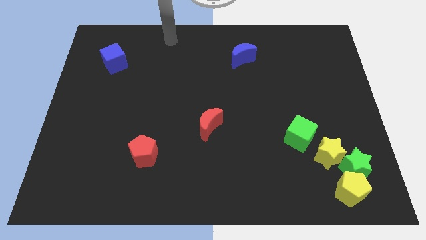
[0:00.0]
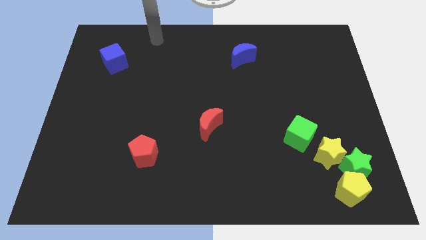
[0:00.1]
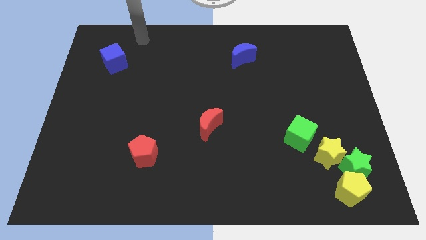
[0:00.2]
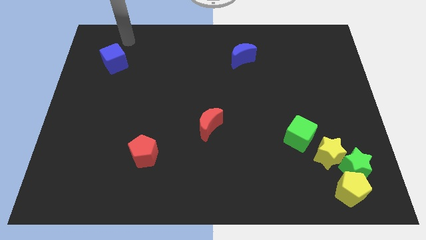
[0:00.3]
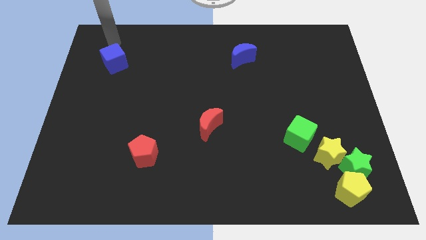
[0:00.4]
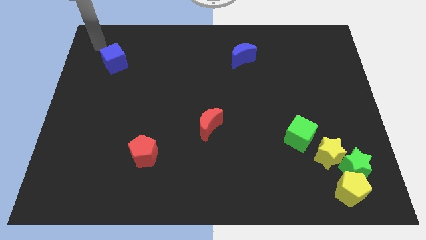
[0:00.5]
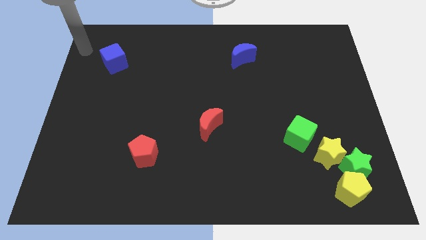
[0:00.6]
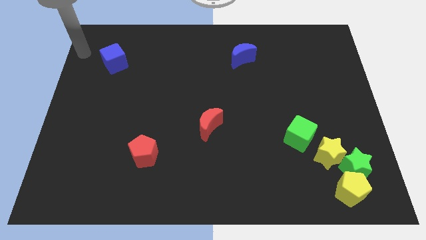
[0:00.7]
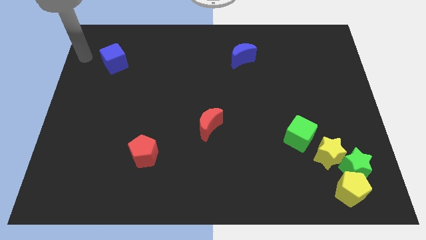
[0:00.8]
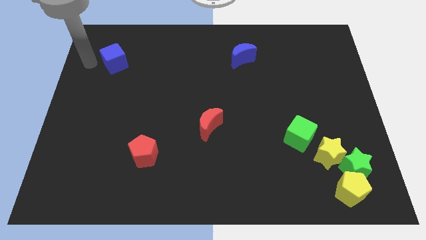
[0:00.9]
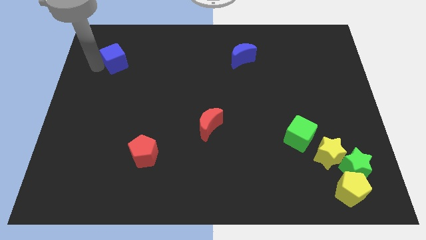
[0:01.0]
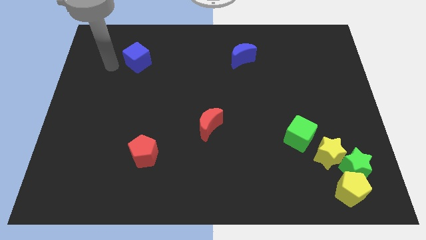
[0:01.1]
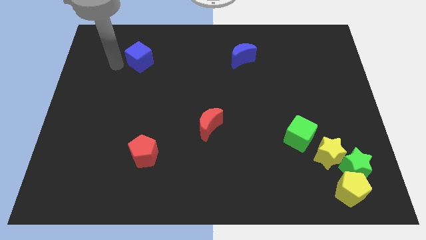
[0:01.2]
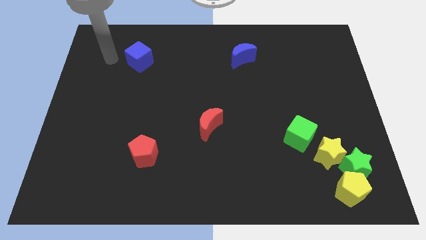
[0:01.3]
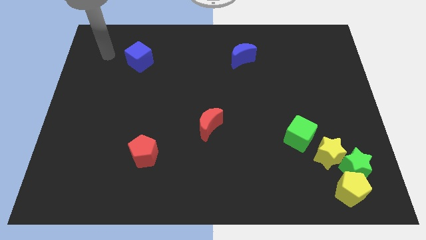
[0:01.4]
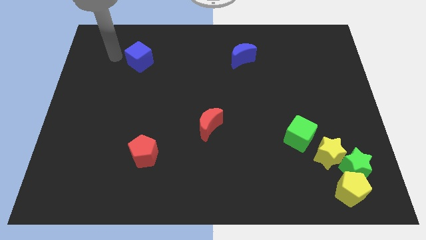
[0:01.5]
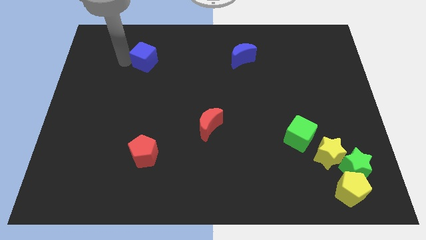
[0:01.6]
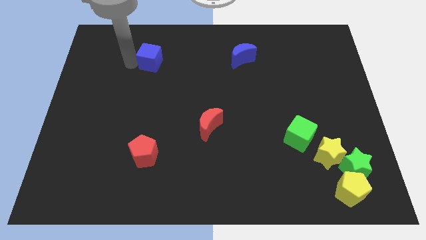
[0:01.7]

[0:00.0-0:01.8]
put the blue cube vertically above the red pentagon

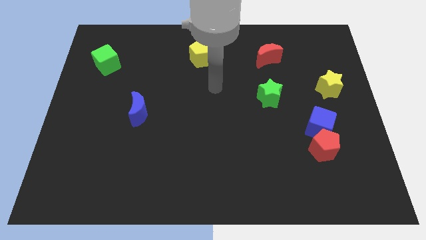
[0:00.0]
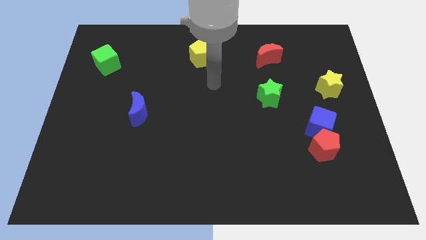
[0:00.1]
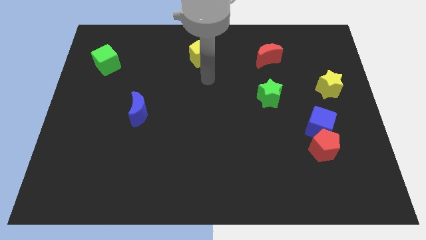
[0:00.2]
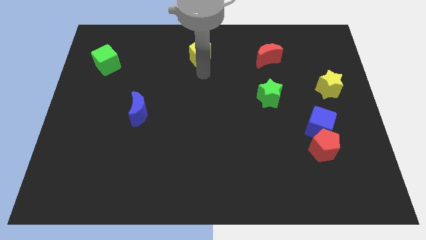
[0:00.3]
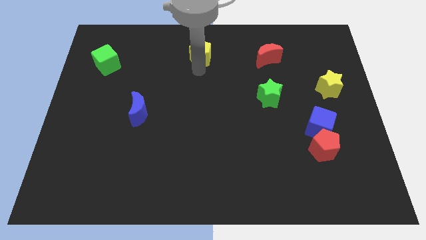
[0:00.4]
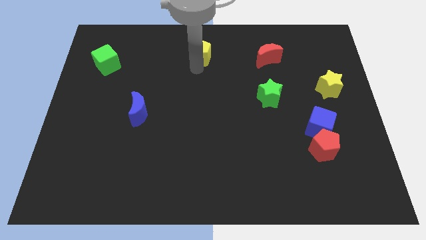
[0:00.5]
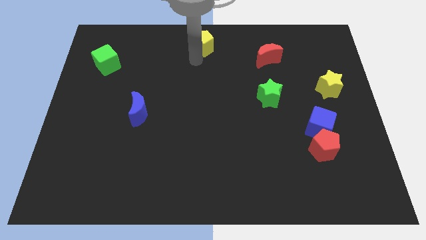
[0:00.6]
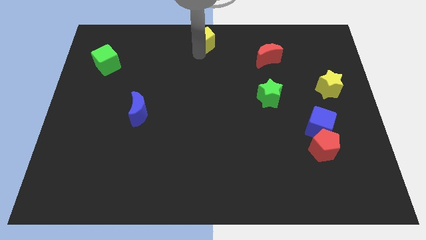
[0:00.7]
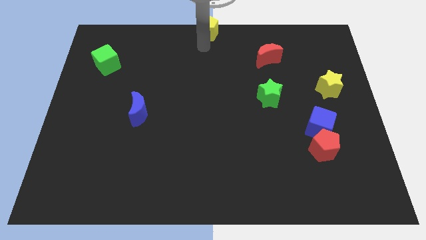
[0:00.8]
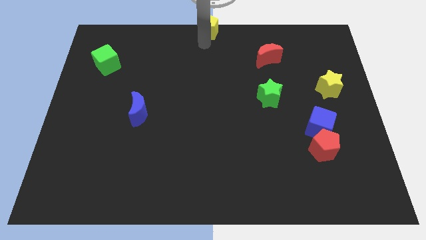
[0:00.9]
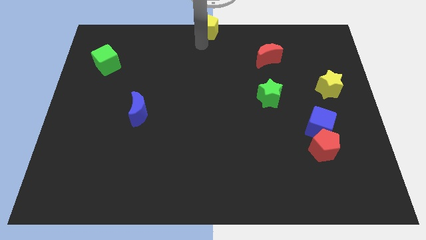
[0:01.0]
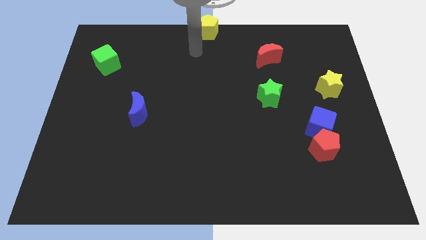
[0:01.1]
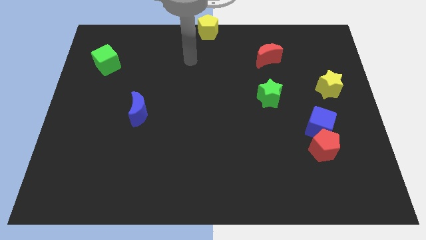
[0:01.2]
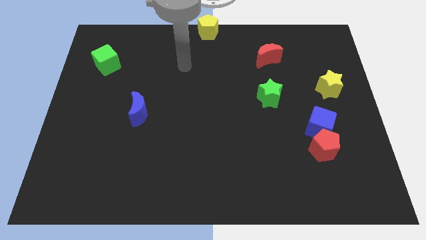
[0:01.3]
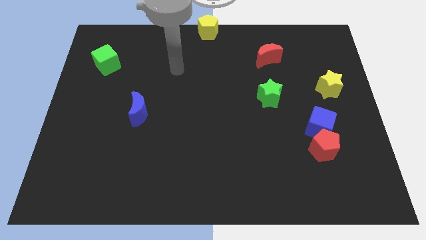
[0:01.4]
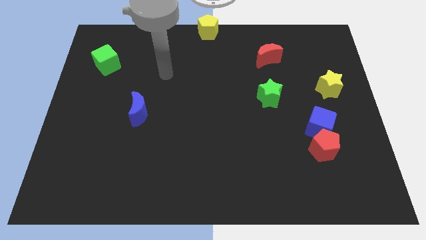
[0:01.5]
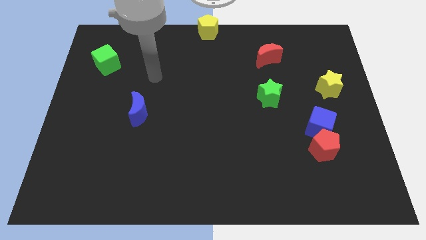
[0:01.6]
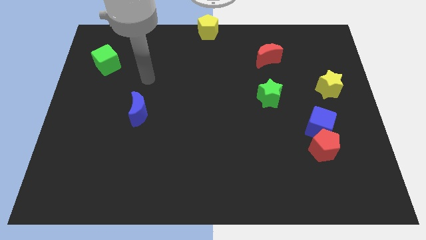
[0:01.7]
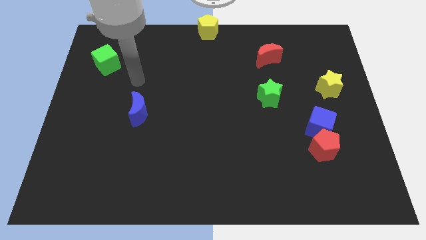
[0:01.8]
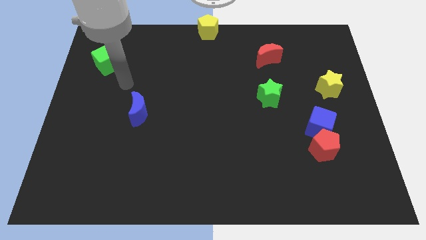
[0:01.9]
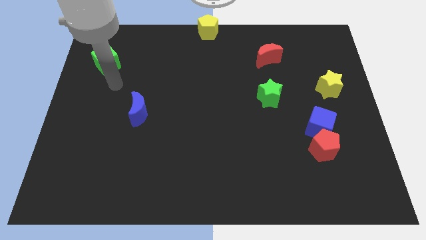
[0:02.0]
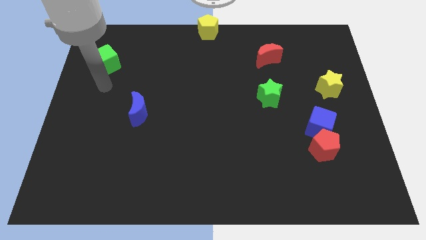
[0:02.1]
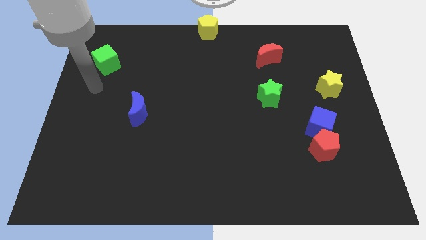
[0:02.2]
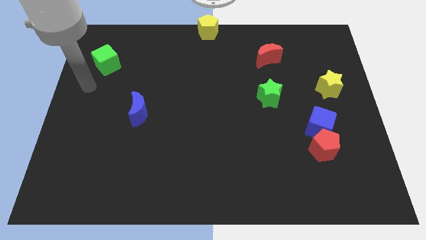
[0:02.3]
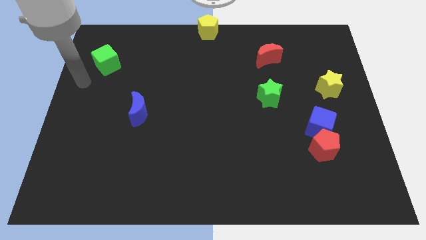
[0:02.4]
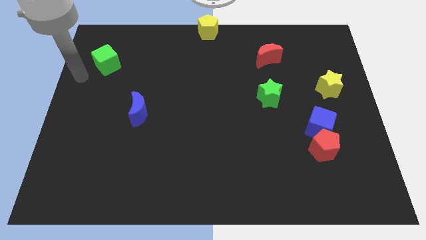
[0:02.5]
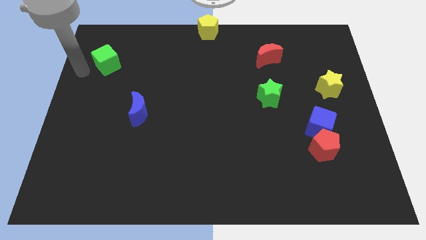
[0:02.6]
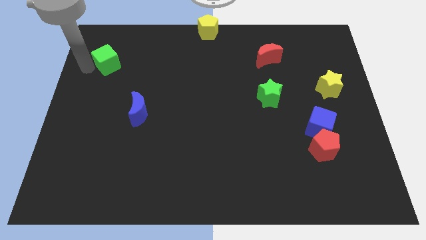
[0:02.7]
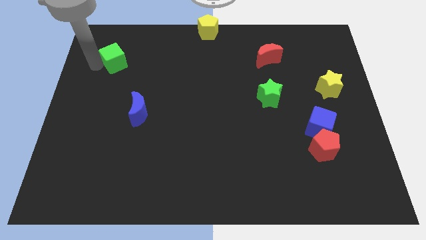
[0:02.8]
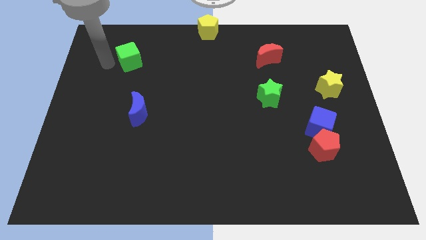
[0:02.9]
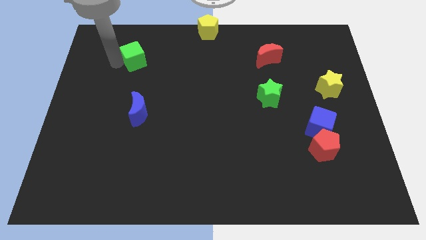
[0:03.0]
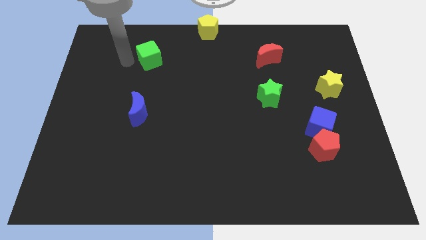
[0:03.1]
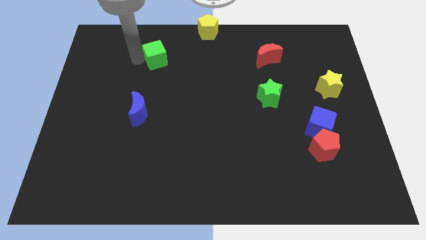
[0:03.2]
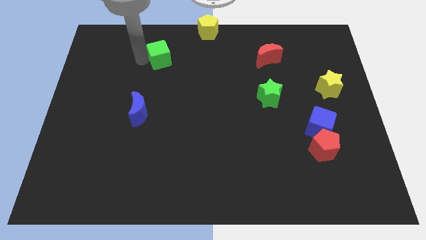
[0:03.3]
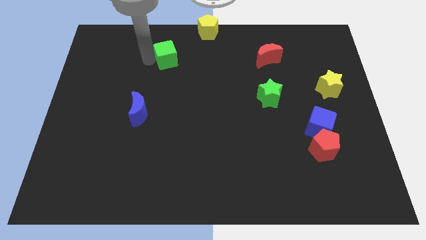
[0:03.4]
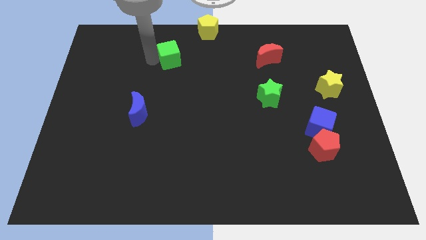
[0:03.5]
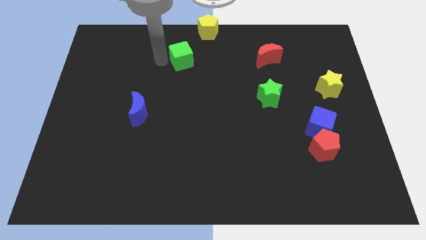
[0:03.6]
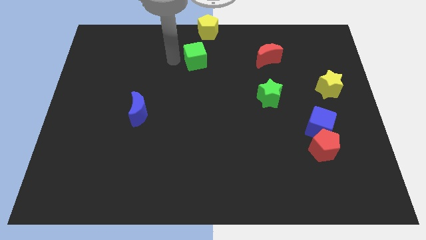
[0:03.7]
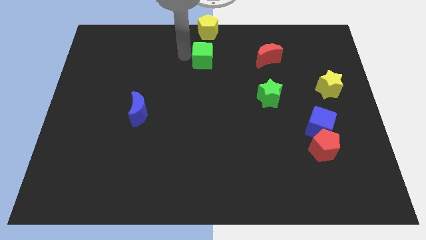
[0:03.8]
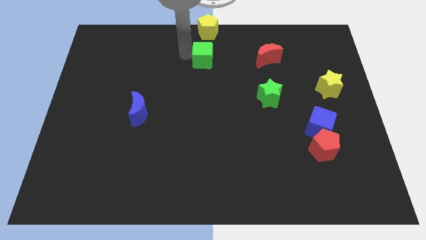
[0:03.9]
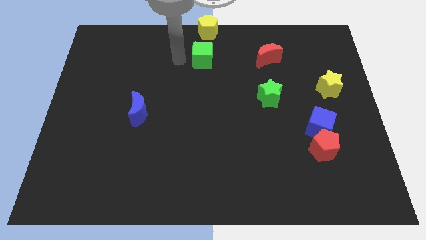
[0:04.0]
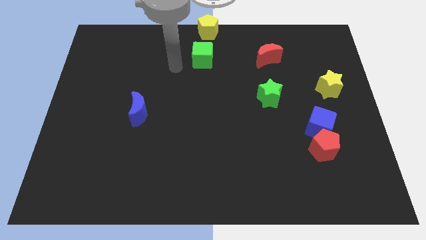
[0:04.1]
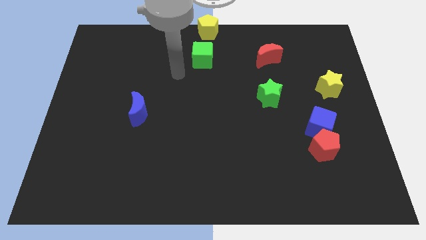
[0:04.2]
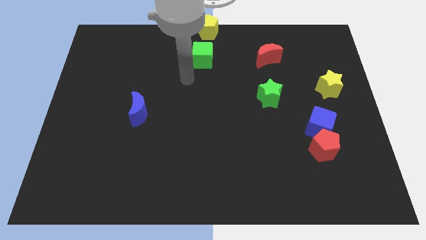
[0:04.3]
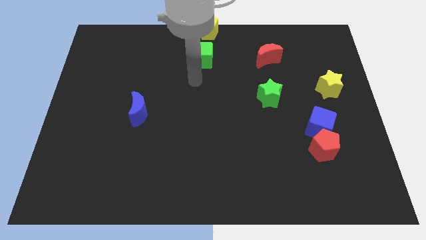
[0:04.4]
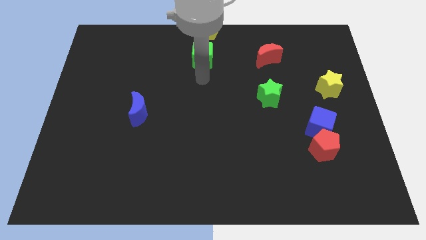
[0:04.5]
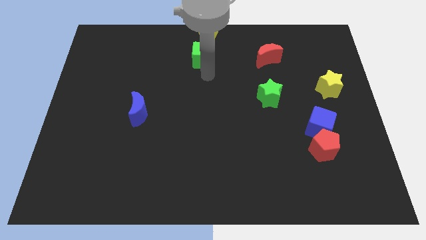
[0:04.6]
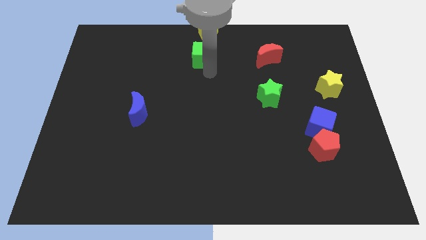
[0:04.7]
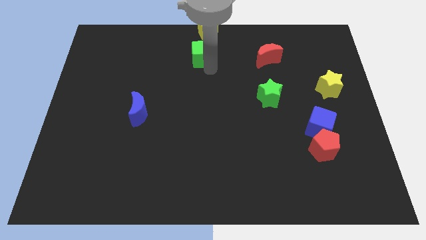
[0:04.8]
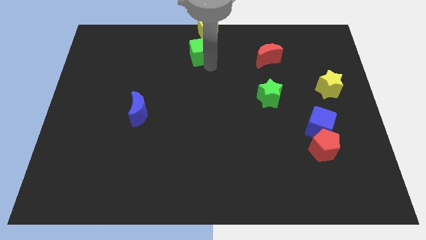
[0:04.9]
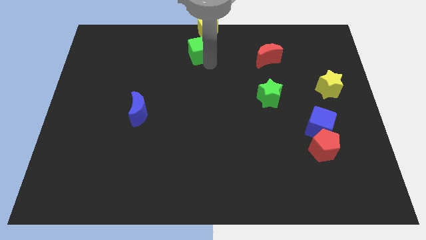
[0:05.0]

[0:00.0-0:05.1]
push the yellow star and green cube towards the top center of the board

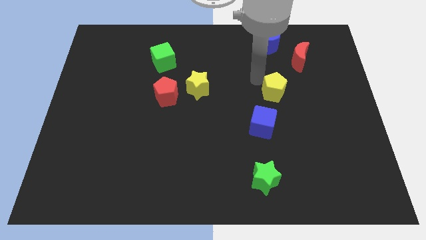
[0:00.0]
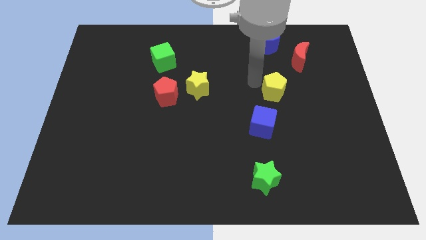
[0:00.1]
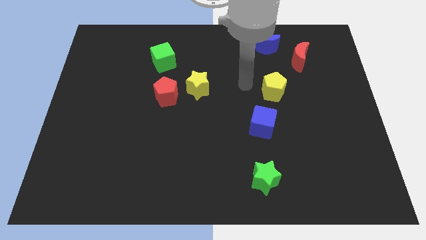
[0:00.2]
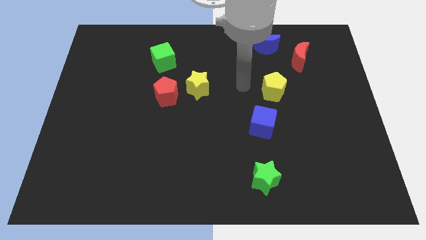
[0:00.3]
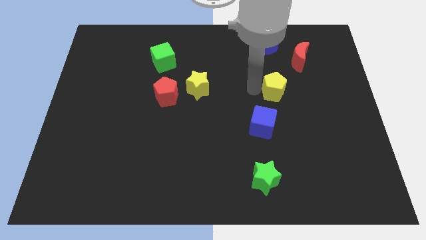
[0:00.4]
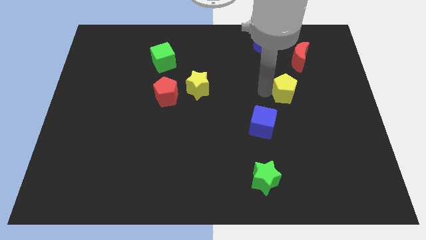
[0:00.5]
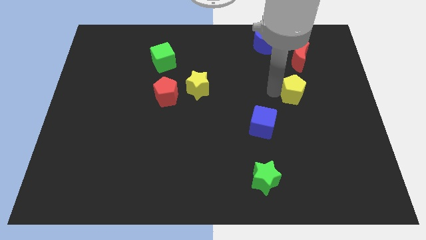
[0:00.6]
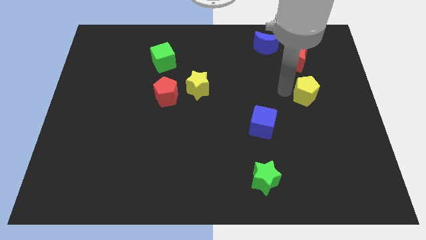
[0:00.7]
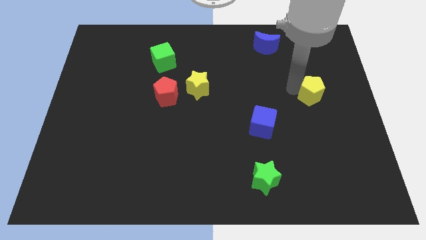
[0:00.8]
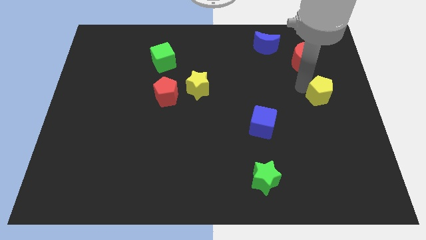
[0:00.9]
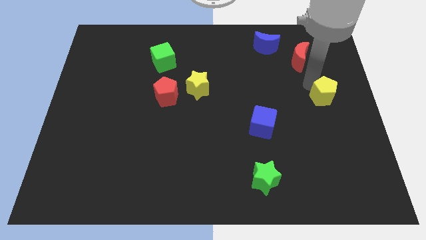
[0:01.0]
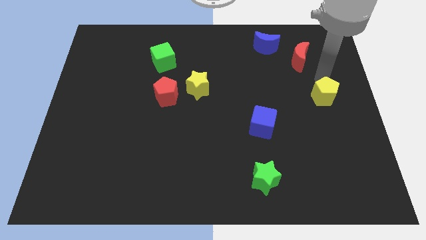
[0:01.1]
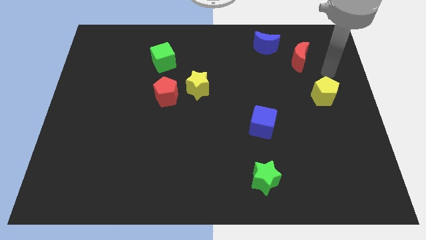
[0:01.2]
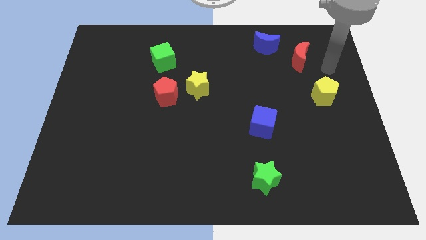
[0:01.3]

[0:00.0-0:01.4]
move yellow pentagon right side of the board

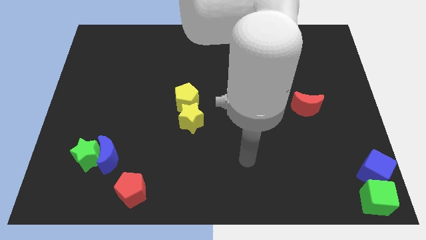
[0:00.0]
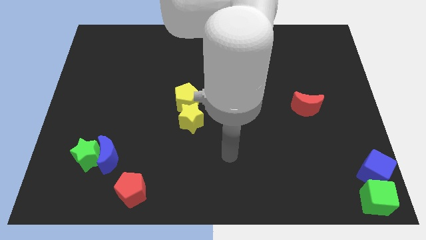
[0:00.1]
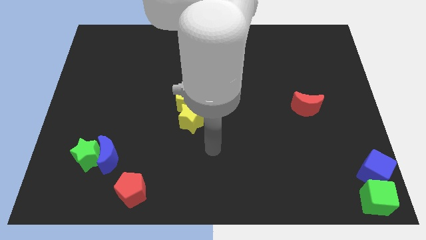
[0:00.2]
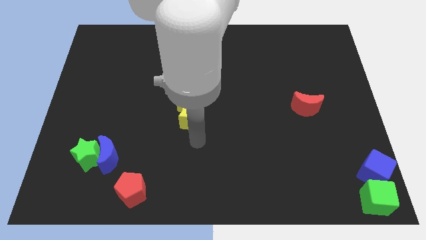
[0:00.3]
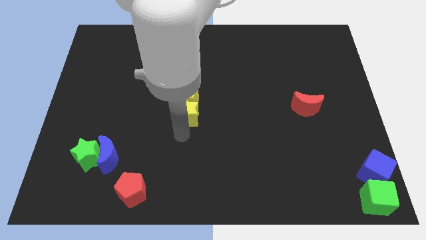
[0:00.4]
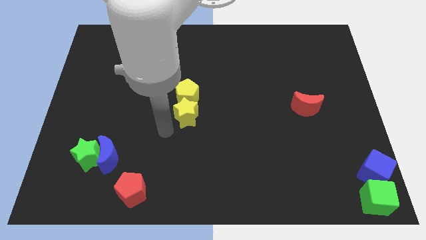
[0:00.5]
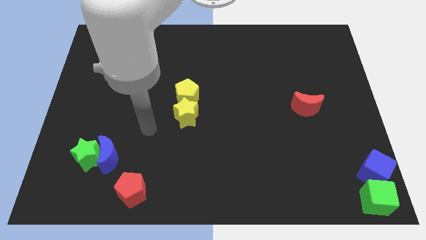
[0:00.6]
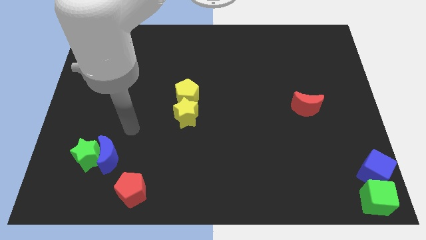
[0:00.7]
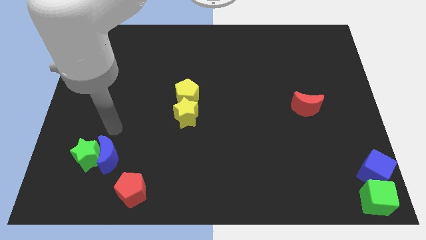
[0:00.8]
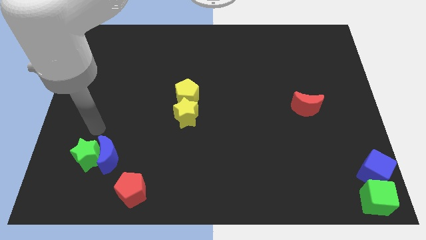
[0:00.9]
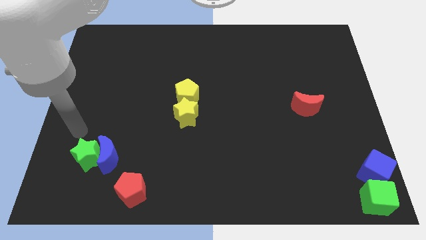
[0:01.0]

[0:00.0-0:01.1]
slightly touch down to the yellow star
